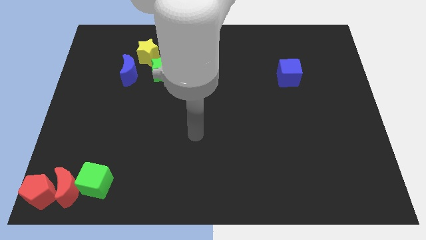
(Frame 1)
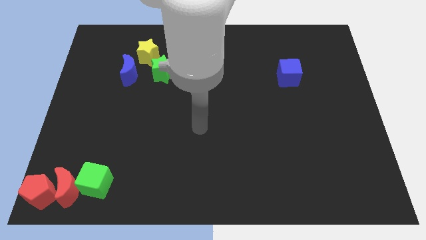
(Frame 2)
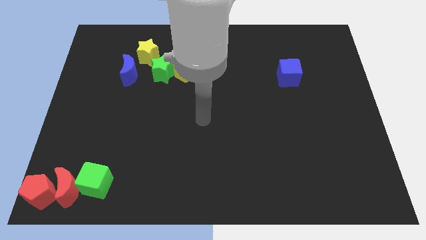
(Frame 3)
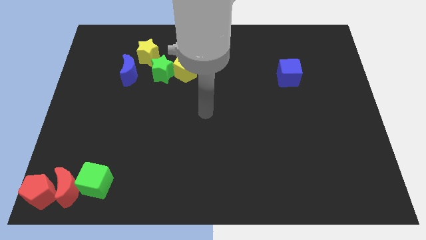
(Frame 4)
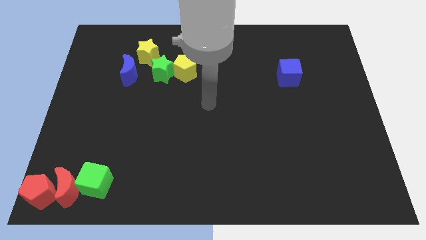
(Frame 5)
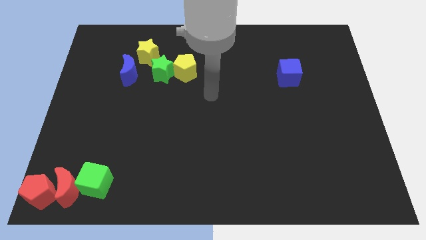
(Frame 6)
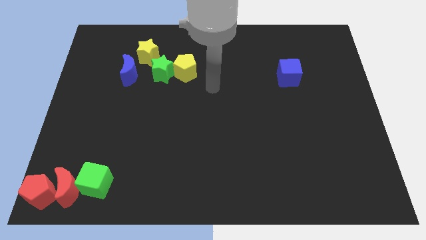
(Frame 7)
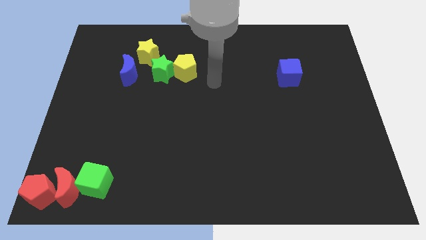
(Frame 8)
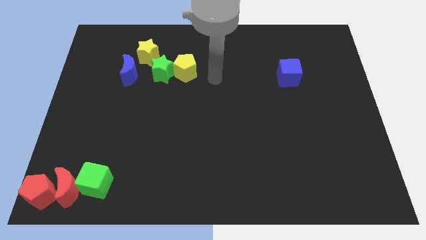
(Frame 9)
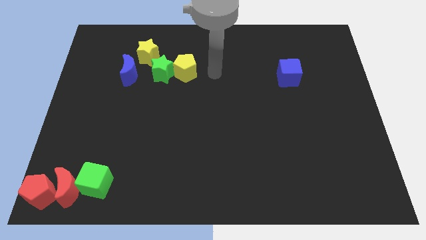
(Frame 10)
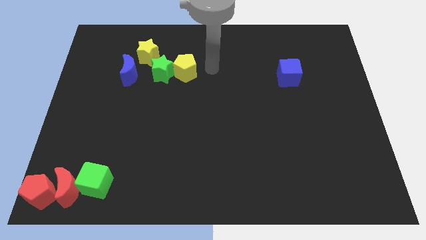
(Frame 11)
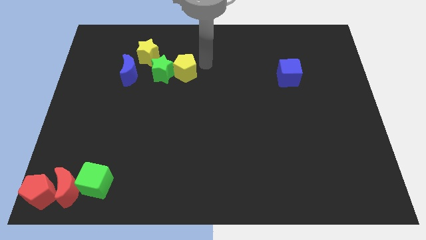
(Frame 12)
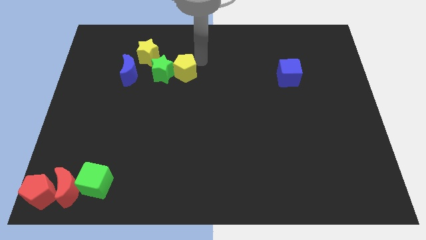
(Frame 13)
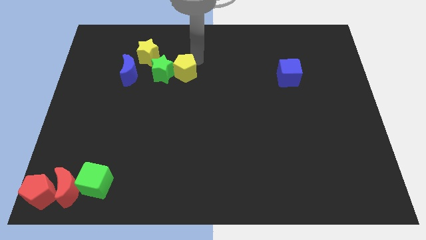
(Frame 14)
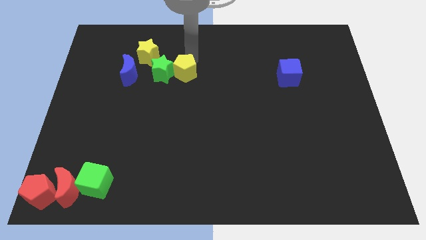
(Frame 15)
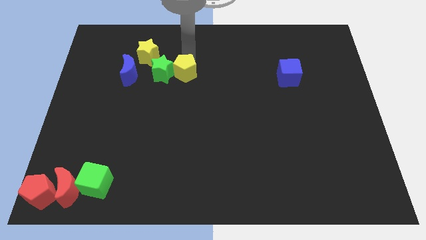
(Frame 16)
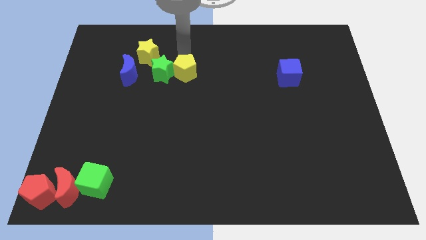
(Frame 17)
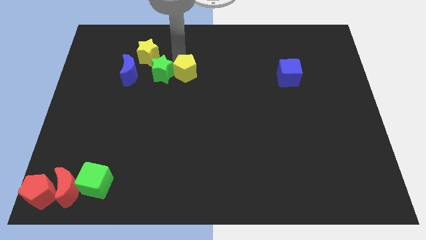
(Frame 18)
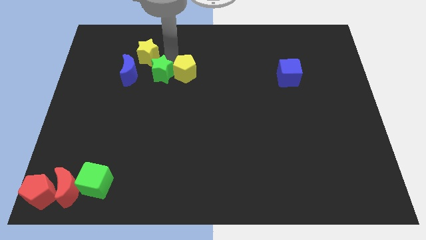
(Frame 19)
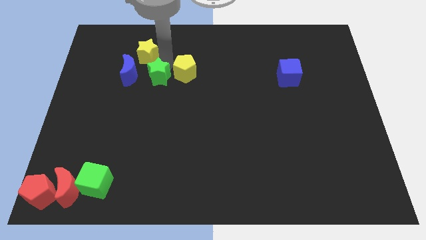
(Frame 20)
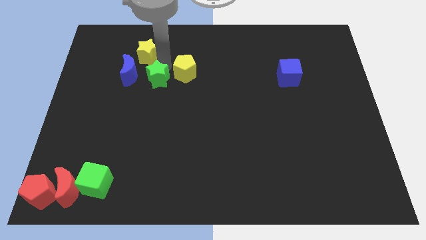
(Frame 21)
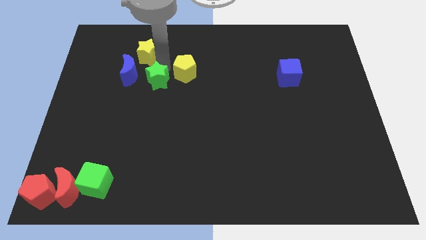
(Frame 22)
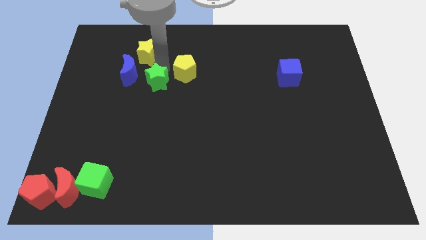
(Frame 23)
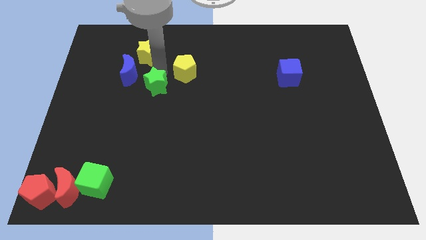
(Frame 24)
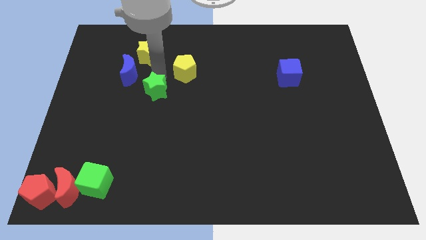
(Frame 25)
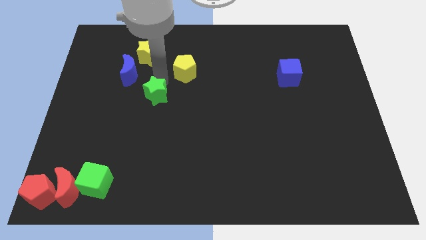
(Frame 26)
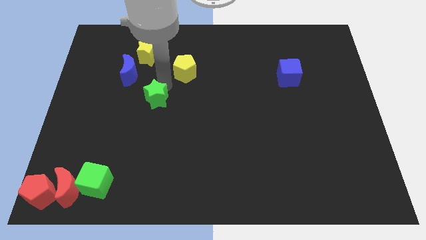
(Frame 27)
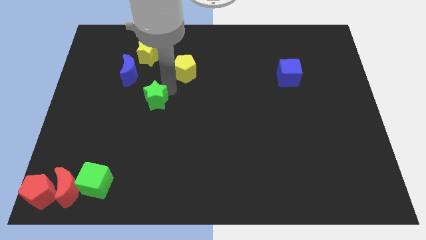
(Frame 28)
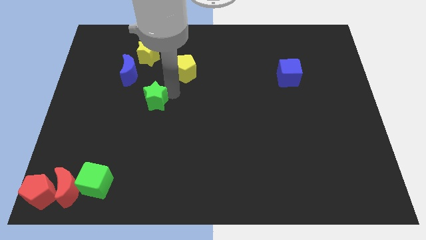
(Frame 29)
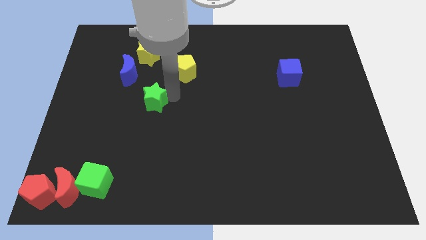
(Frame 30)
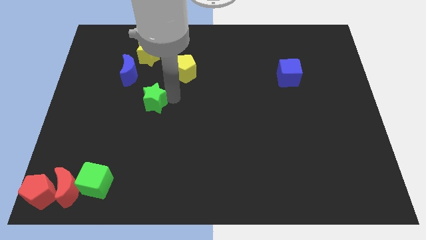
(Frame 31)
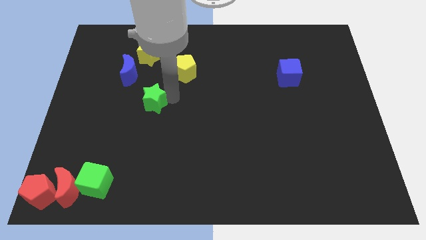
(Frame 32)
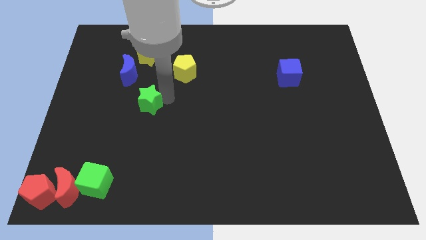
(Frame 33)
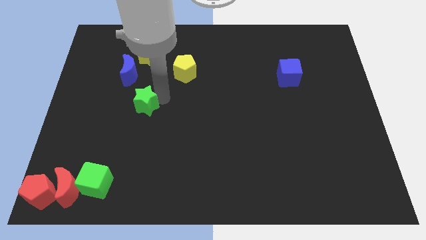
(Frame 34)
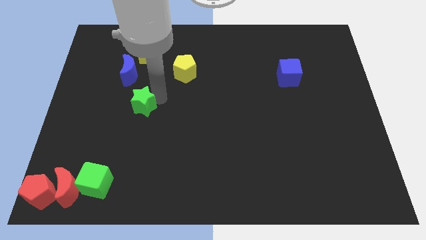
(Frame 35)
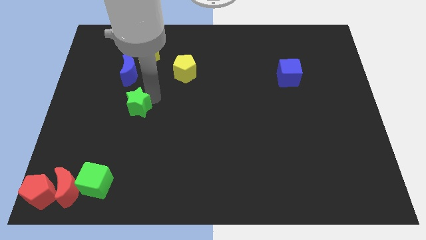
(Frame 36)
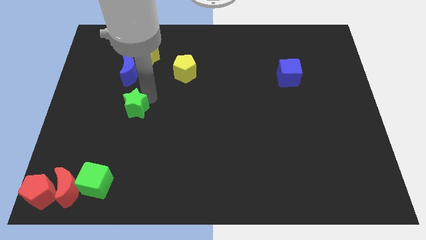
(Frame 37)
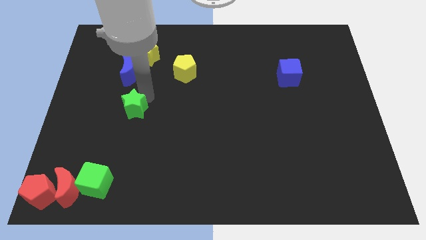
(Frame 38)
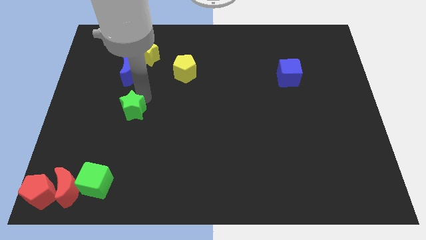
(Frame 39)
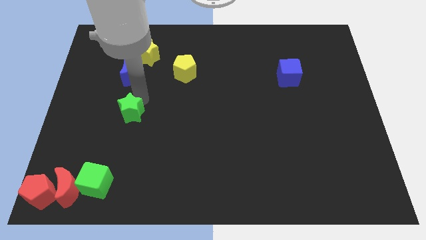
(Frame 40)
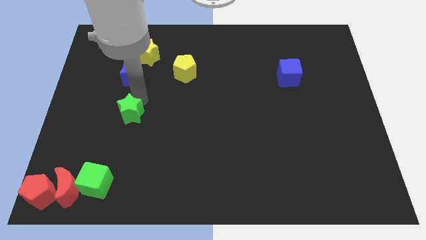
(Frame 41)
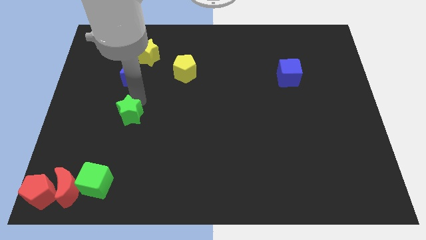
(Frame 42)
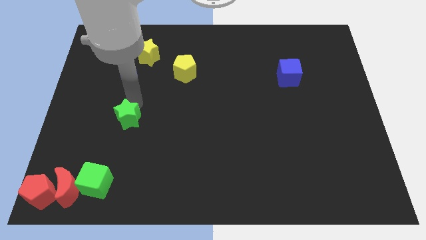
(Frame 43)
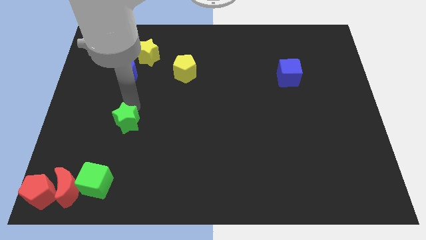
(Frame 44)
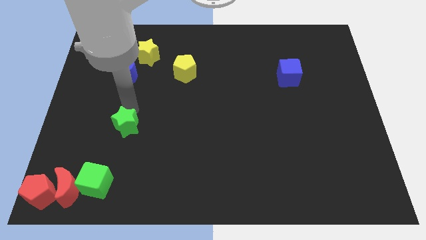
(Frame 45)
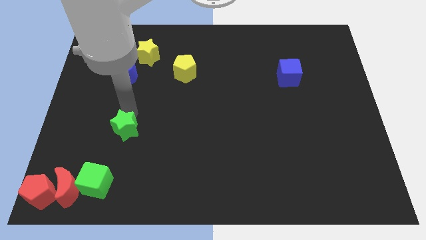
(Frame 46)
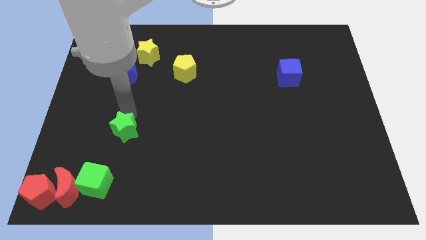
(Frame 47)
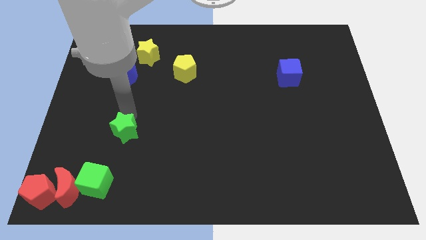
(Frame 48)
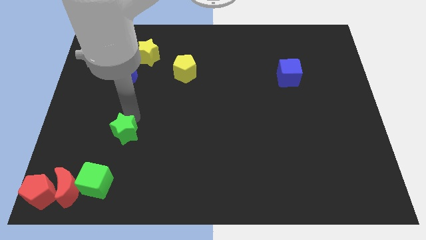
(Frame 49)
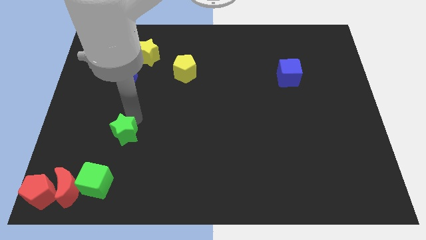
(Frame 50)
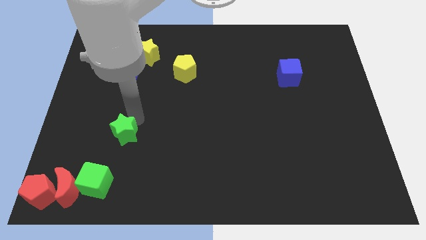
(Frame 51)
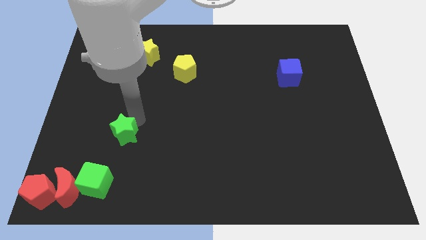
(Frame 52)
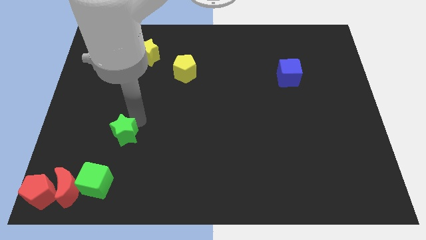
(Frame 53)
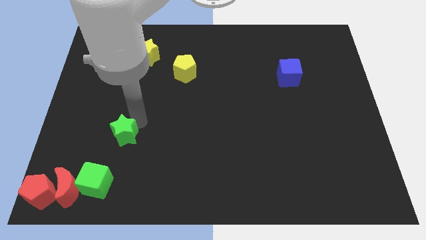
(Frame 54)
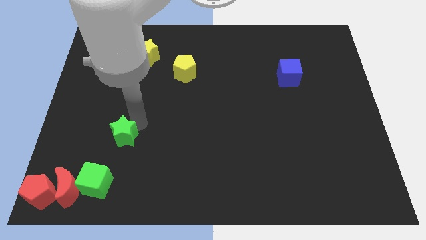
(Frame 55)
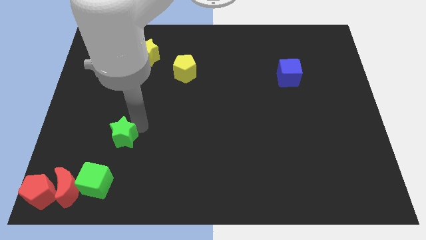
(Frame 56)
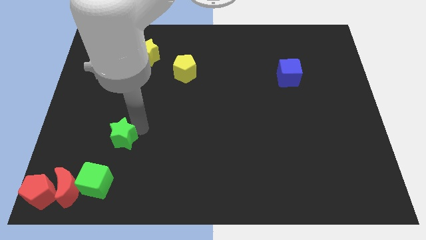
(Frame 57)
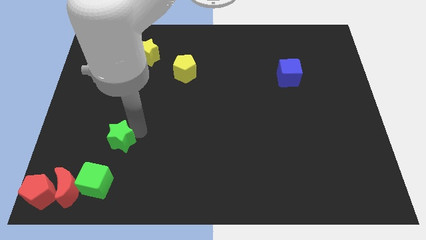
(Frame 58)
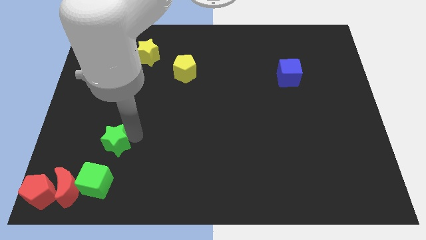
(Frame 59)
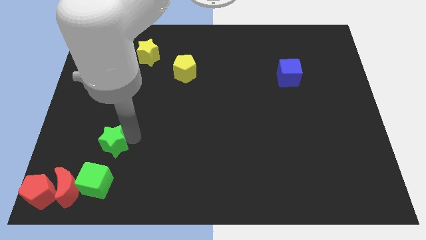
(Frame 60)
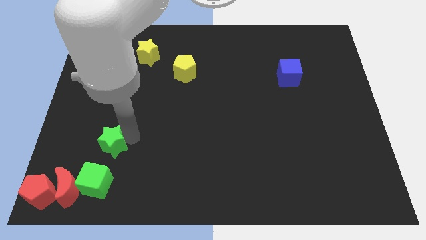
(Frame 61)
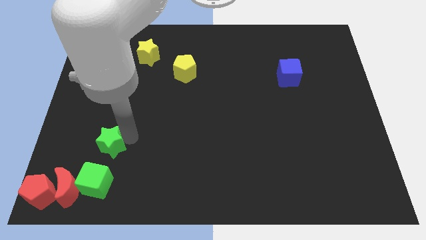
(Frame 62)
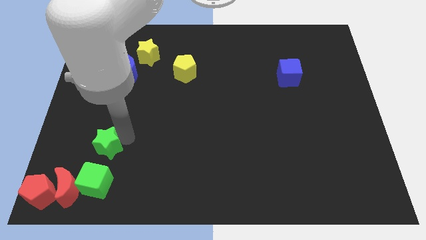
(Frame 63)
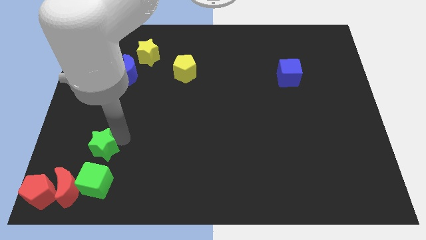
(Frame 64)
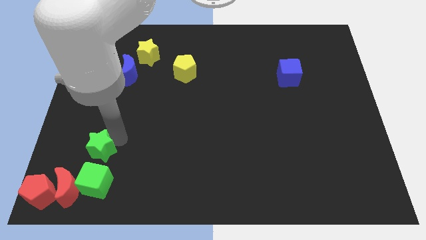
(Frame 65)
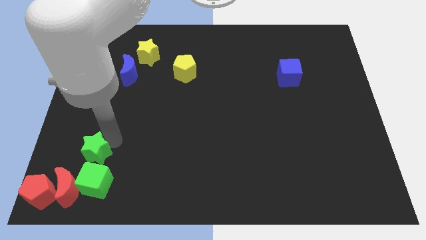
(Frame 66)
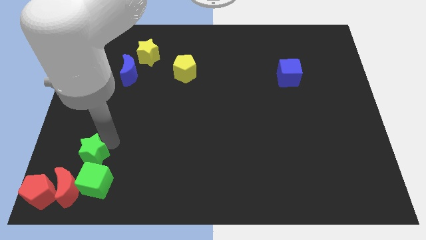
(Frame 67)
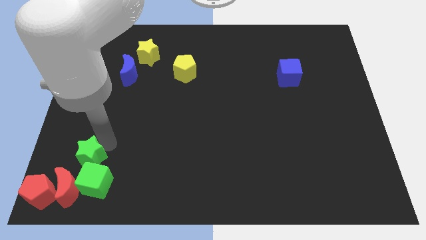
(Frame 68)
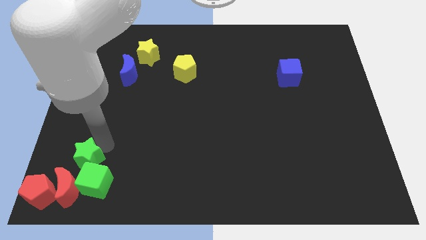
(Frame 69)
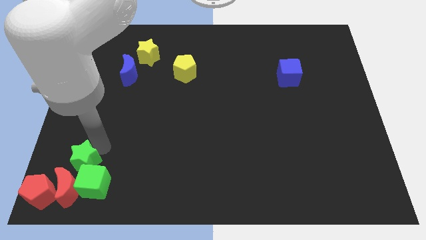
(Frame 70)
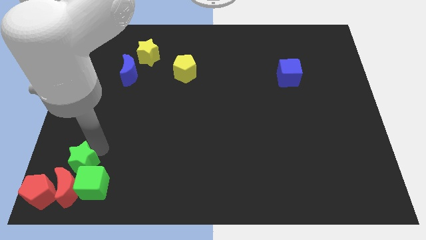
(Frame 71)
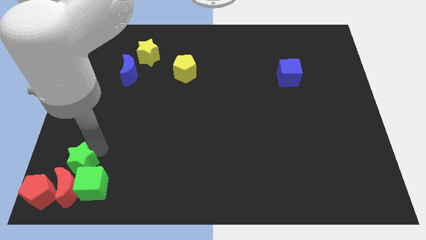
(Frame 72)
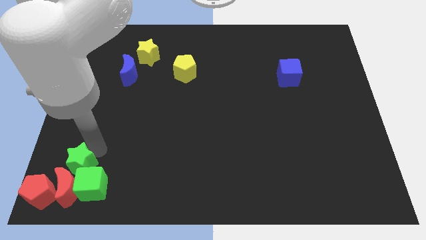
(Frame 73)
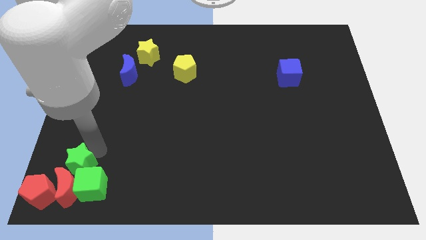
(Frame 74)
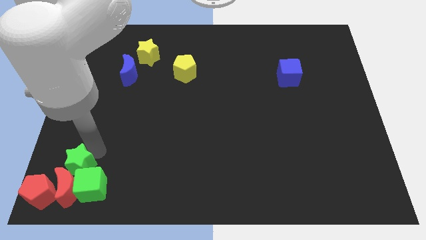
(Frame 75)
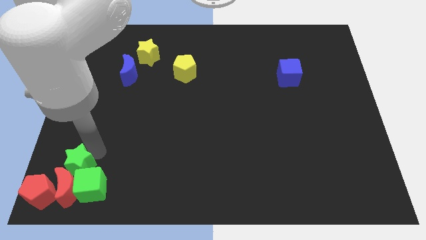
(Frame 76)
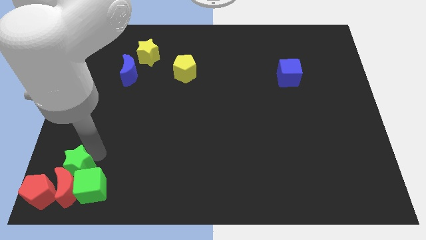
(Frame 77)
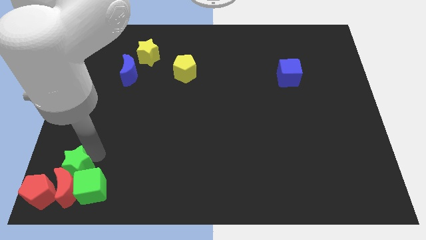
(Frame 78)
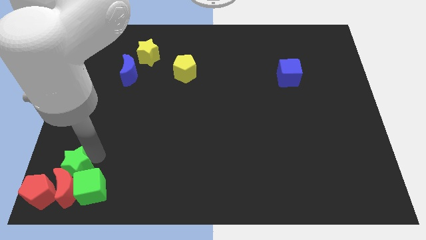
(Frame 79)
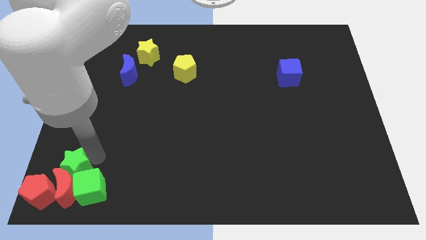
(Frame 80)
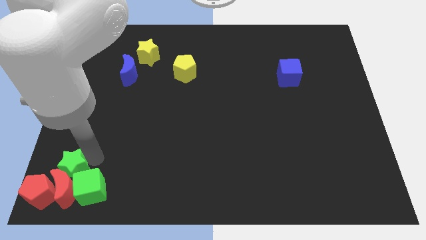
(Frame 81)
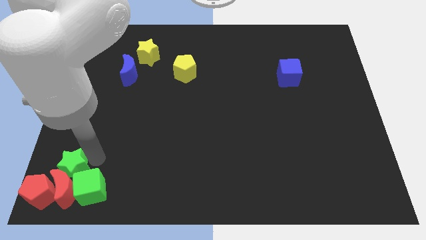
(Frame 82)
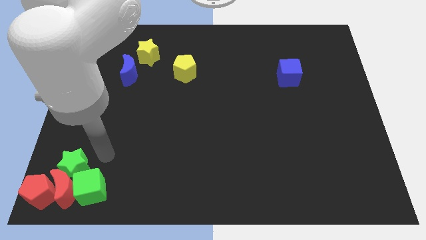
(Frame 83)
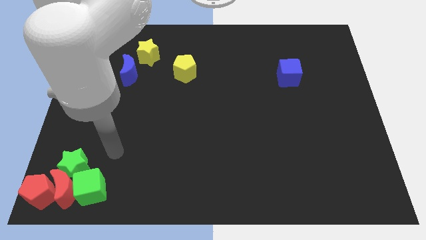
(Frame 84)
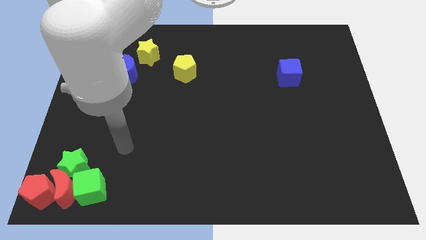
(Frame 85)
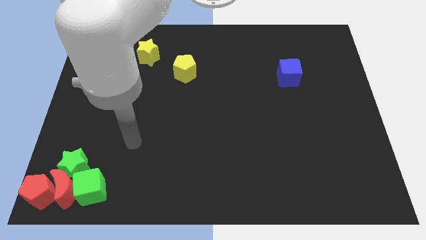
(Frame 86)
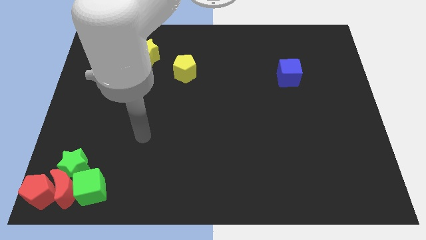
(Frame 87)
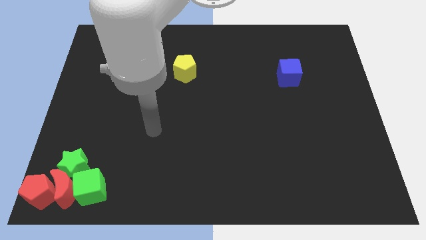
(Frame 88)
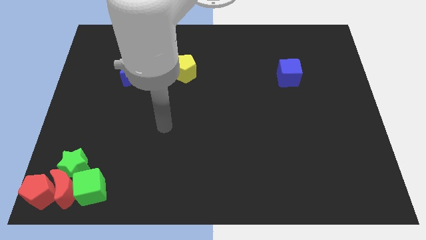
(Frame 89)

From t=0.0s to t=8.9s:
push the green star into the green cube on bottom left

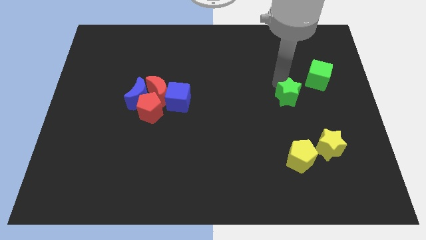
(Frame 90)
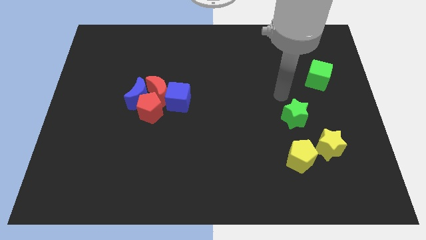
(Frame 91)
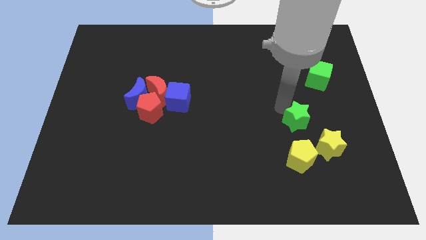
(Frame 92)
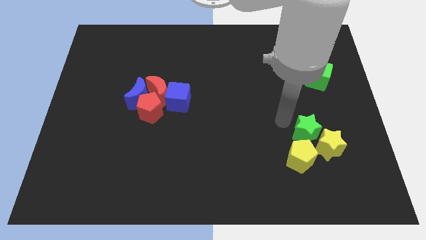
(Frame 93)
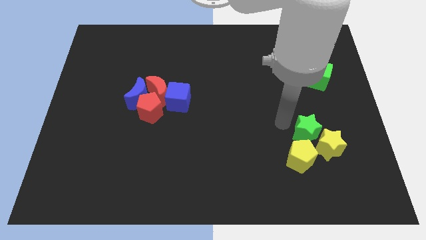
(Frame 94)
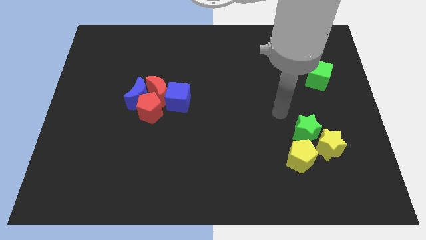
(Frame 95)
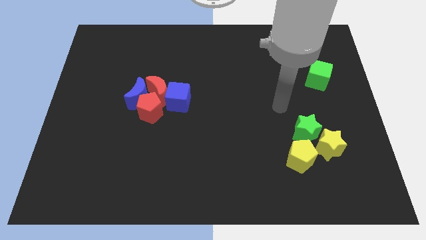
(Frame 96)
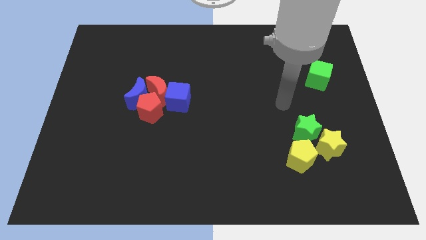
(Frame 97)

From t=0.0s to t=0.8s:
place green star above yellow star
